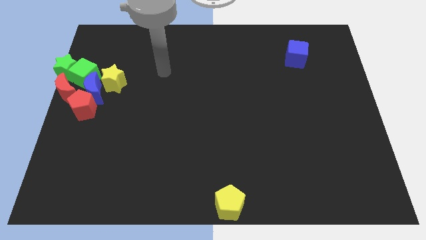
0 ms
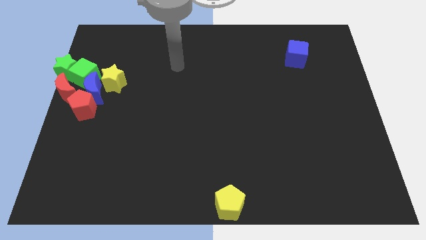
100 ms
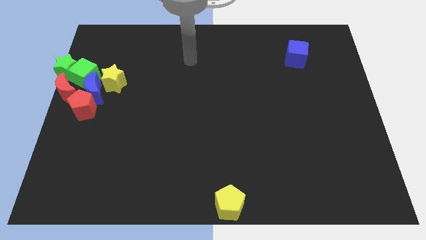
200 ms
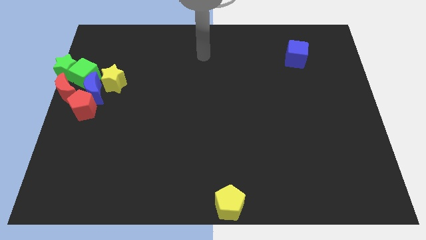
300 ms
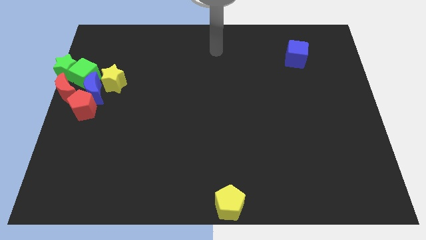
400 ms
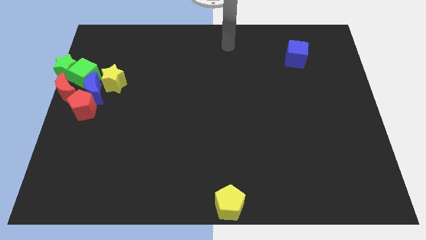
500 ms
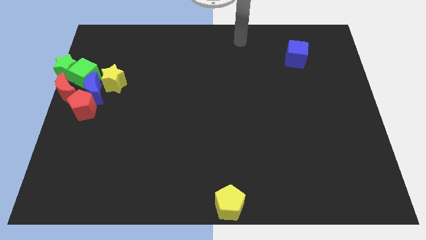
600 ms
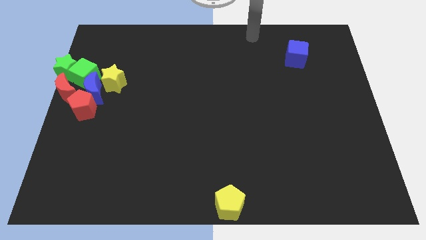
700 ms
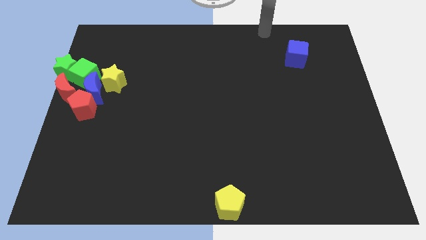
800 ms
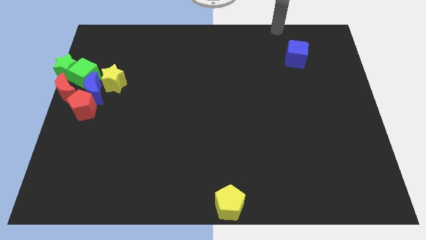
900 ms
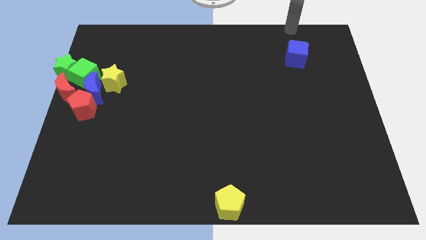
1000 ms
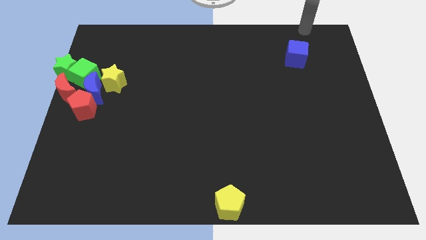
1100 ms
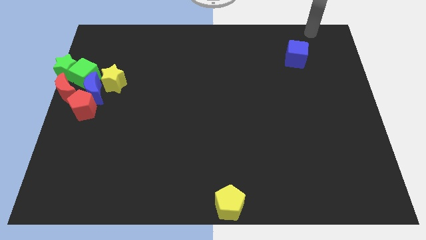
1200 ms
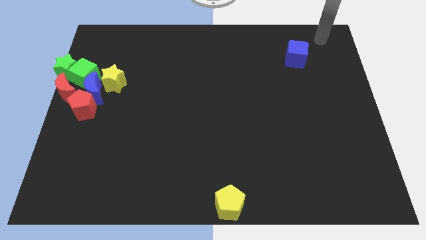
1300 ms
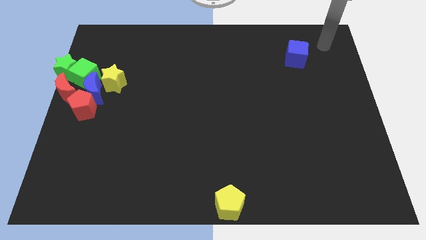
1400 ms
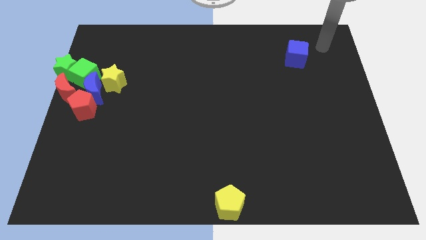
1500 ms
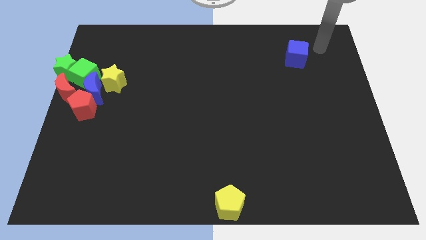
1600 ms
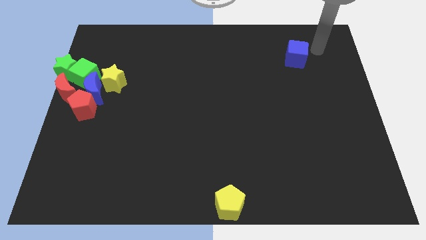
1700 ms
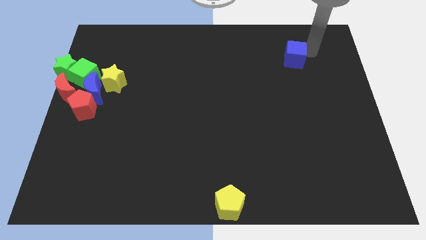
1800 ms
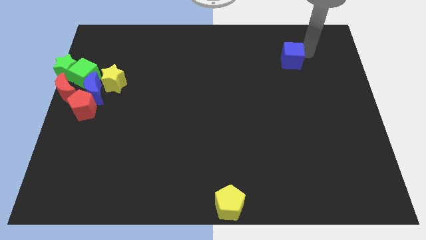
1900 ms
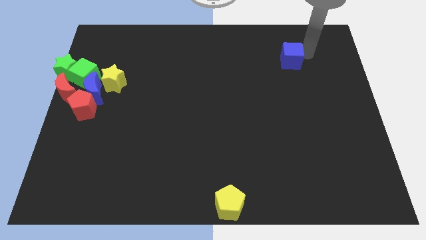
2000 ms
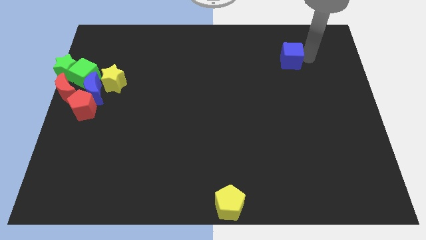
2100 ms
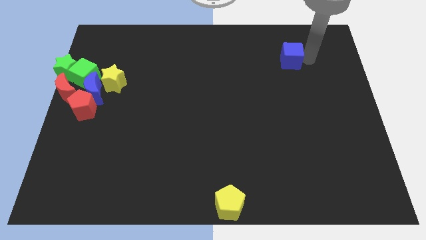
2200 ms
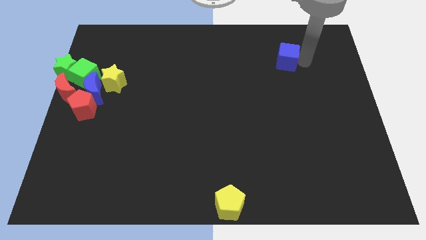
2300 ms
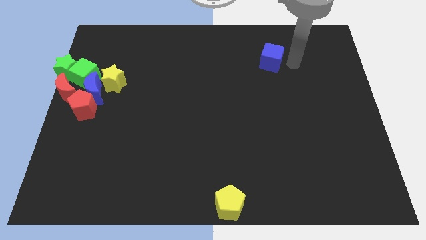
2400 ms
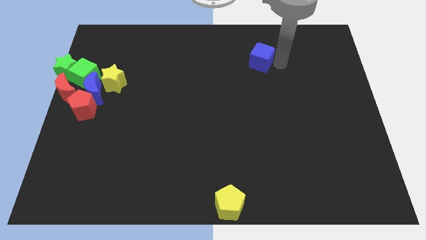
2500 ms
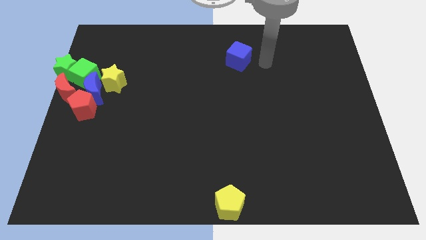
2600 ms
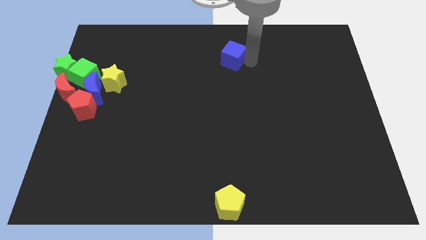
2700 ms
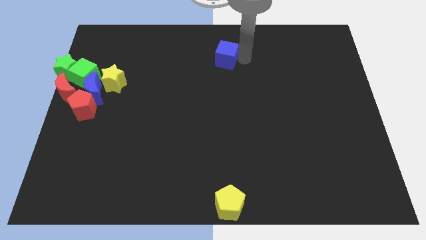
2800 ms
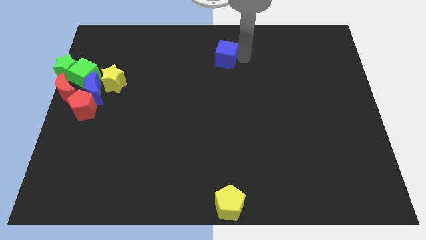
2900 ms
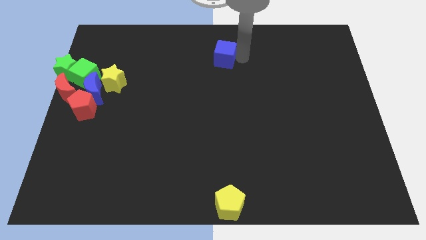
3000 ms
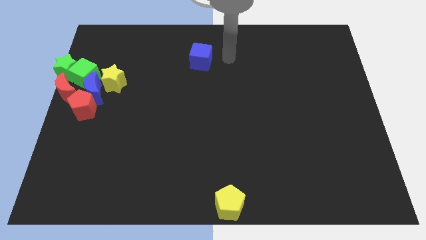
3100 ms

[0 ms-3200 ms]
slide the blue cube towards left

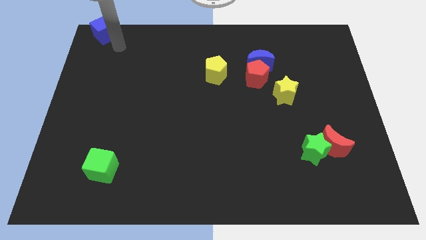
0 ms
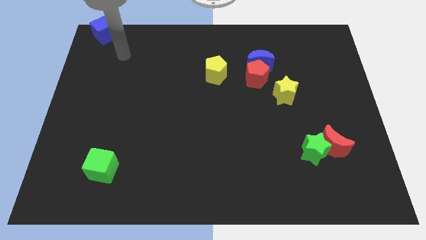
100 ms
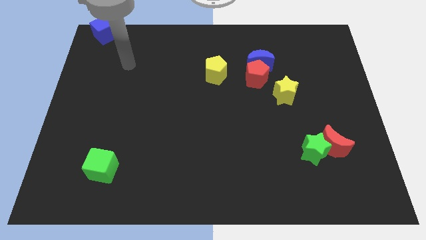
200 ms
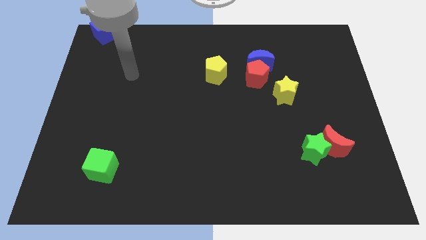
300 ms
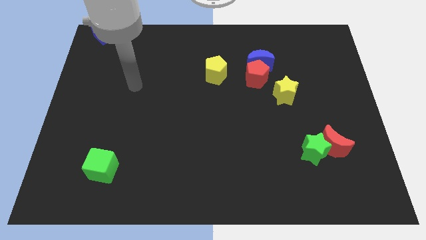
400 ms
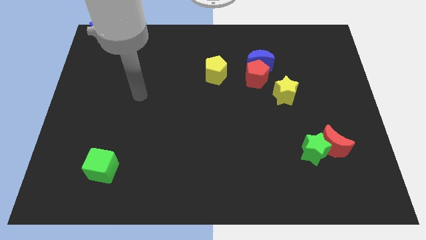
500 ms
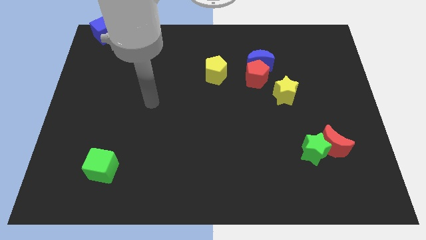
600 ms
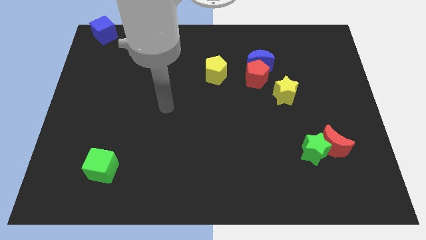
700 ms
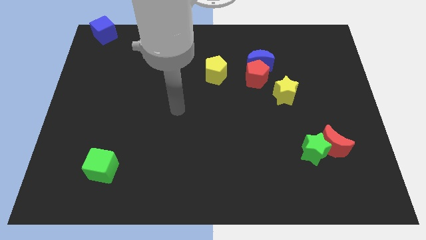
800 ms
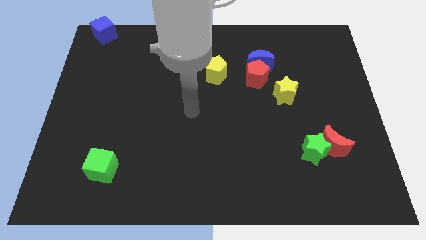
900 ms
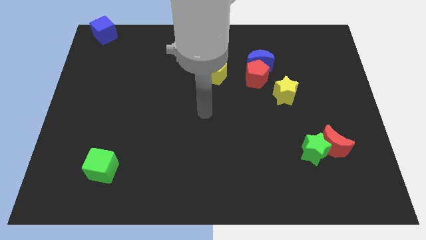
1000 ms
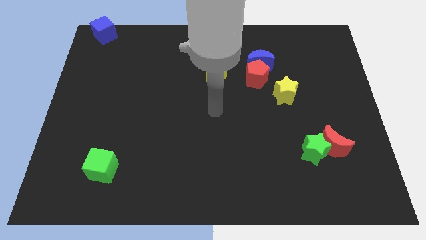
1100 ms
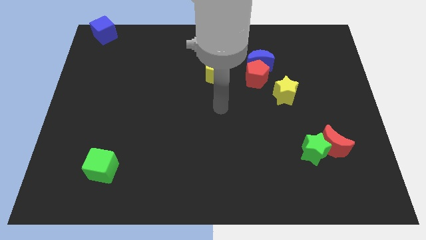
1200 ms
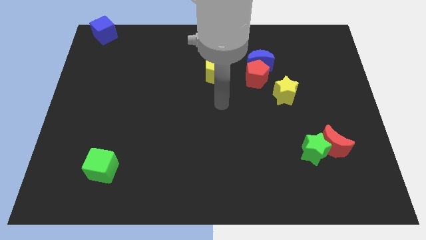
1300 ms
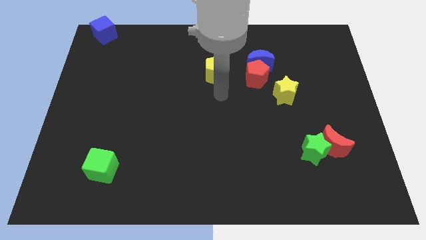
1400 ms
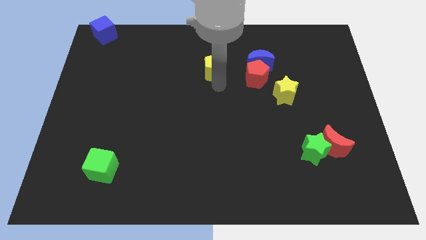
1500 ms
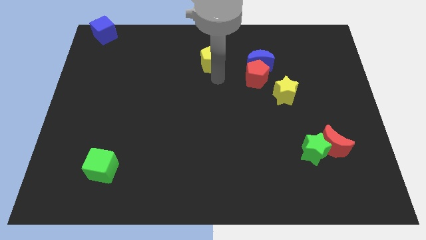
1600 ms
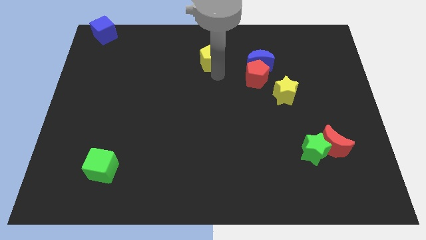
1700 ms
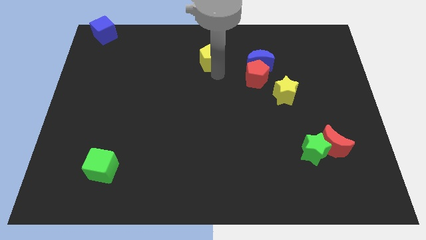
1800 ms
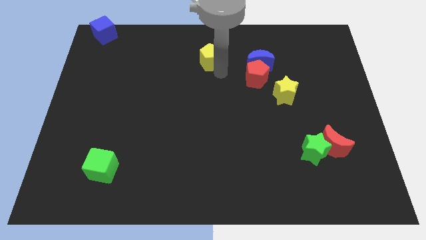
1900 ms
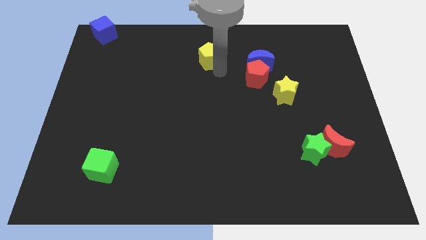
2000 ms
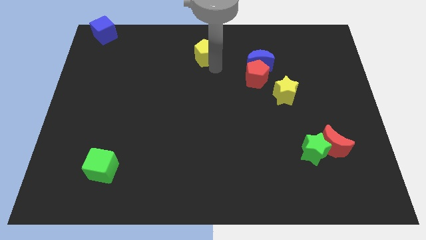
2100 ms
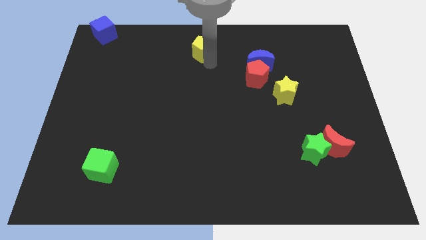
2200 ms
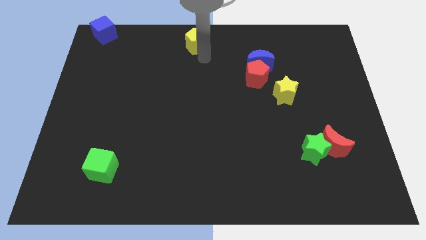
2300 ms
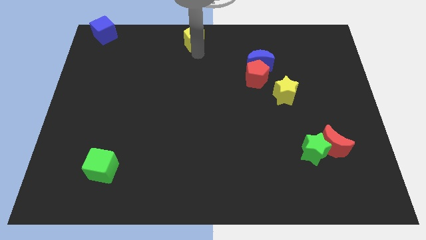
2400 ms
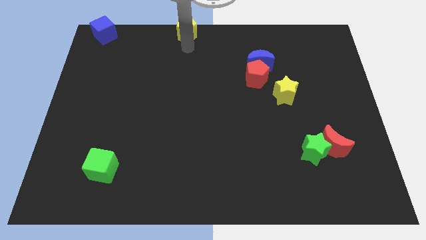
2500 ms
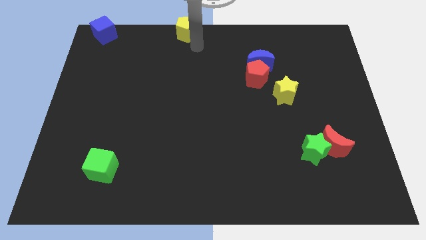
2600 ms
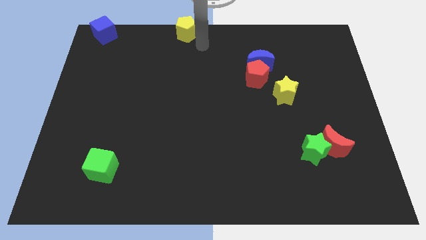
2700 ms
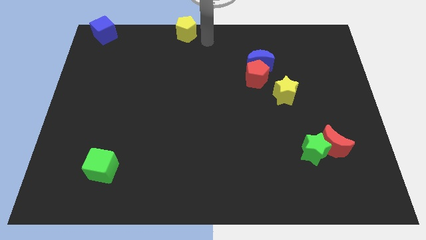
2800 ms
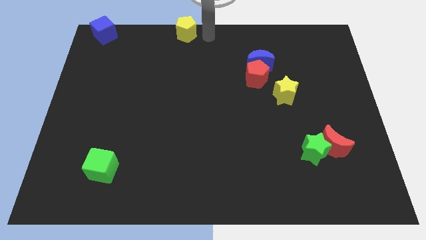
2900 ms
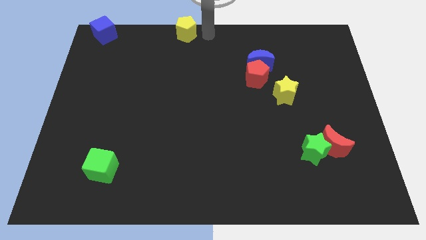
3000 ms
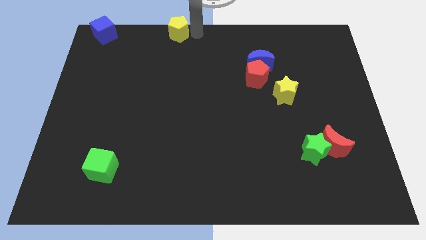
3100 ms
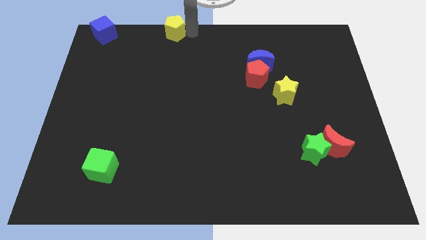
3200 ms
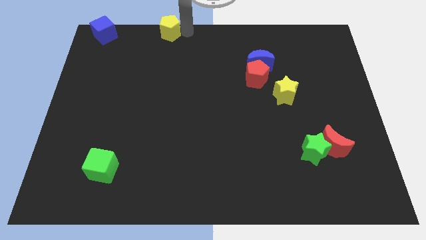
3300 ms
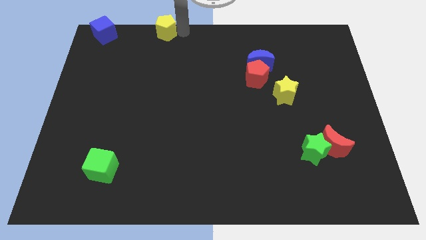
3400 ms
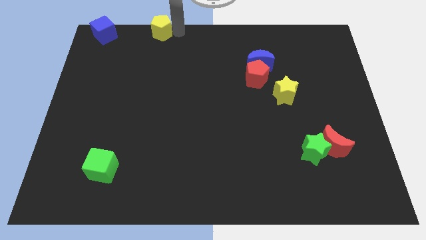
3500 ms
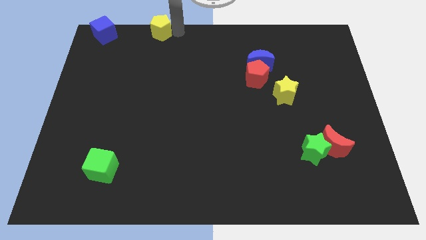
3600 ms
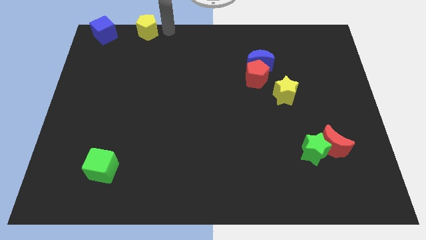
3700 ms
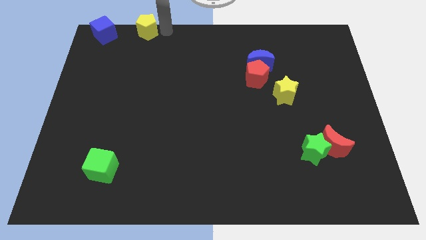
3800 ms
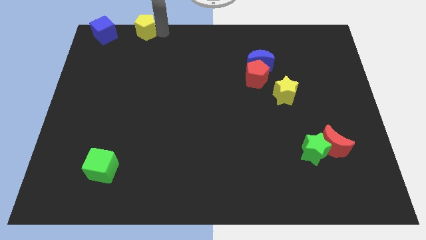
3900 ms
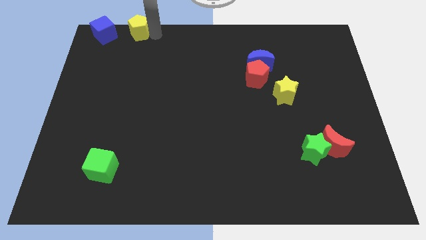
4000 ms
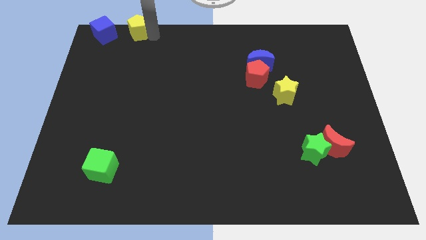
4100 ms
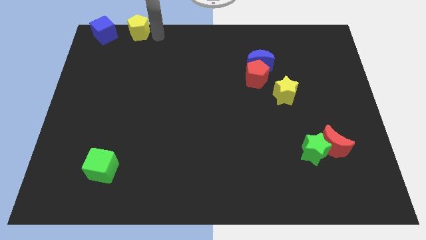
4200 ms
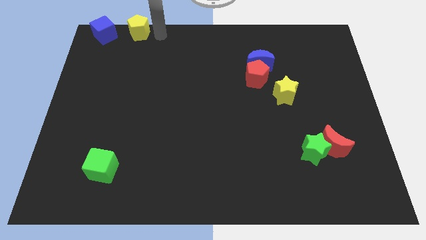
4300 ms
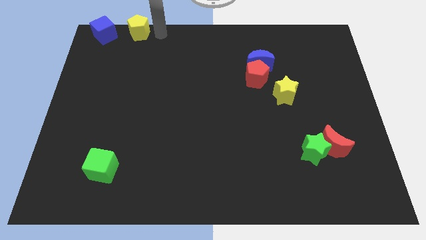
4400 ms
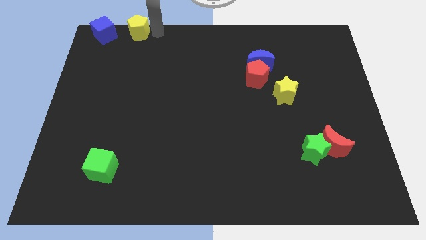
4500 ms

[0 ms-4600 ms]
move the yellow pentagon to the right of the blue cube

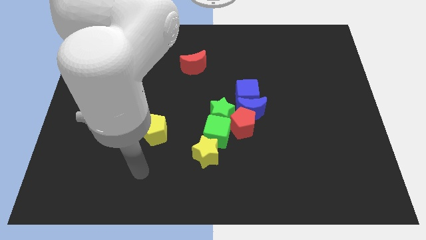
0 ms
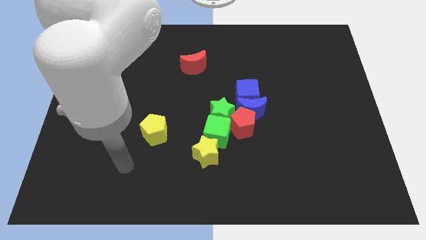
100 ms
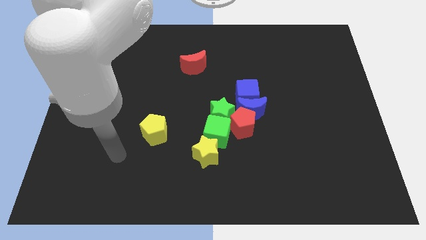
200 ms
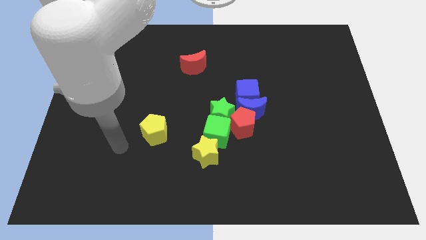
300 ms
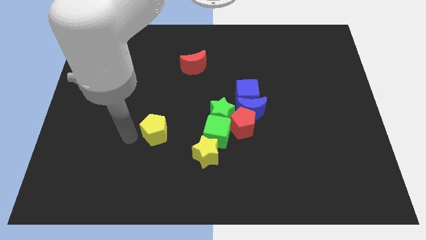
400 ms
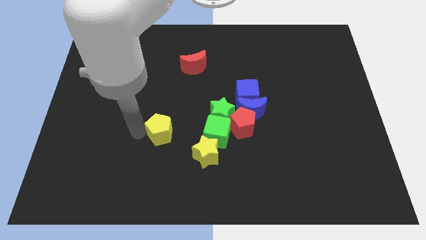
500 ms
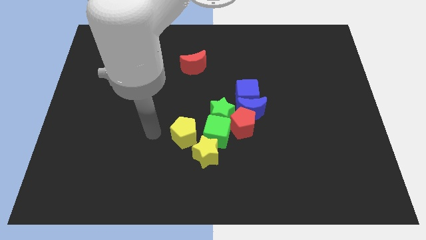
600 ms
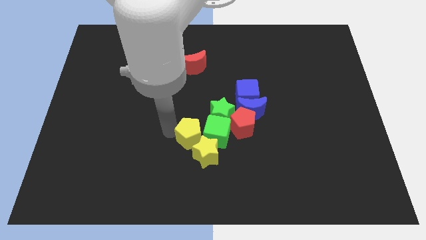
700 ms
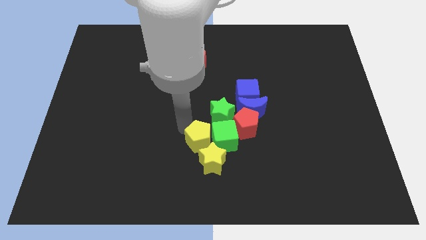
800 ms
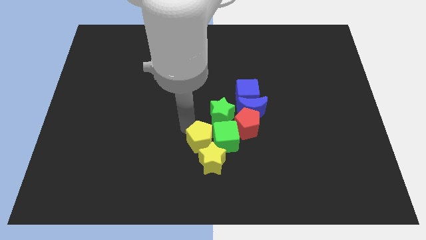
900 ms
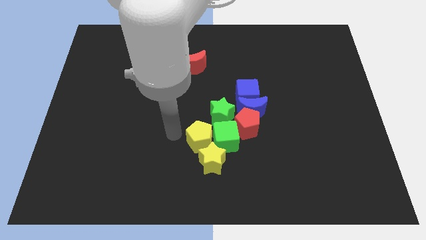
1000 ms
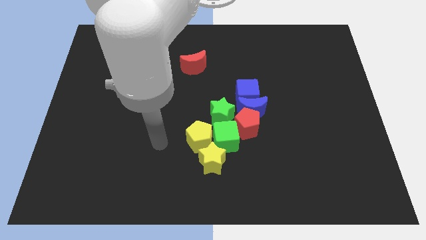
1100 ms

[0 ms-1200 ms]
push the yellow pentagon into the green cube

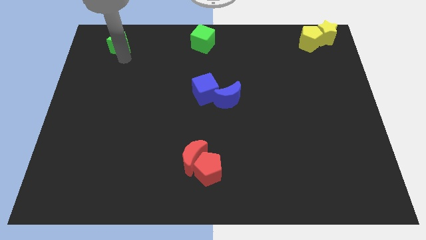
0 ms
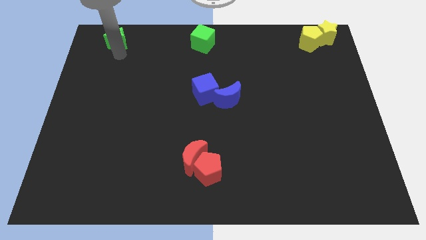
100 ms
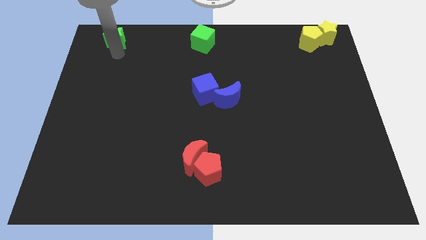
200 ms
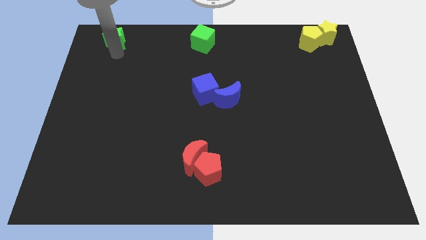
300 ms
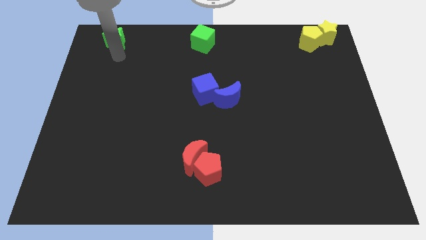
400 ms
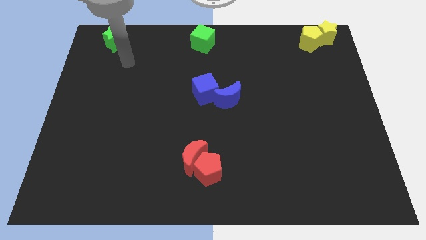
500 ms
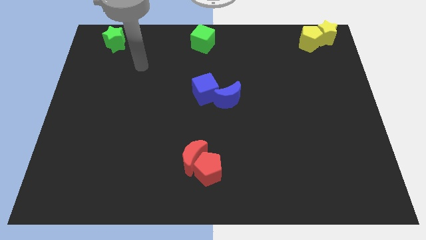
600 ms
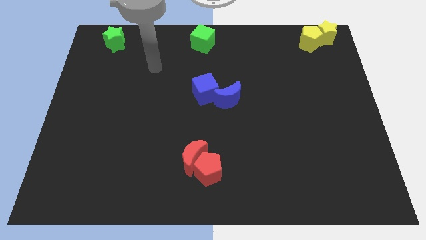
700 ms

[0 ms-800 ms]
place a green star on the top left corner of the board
